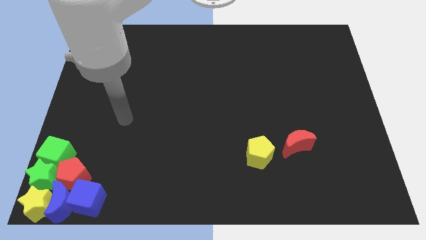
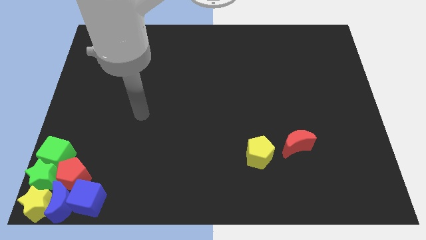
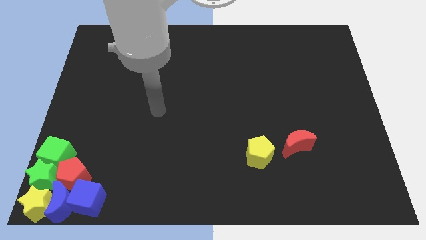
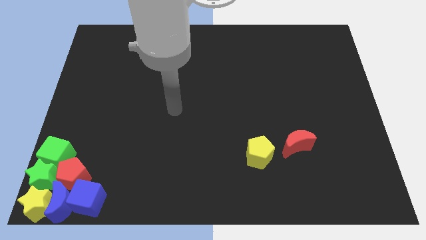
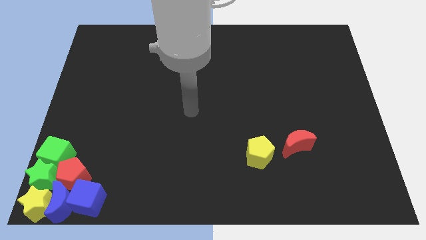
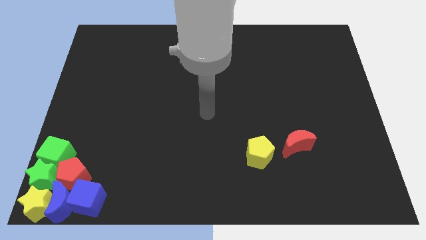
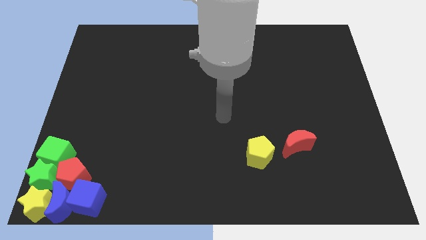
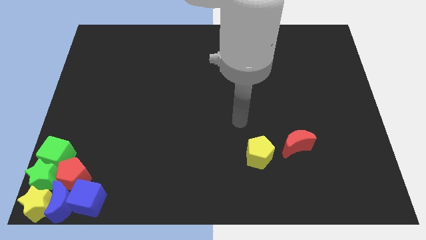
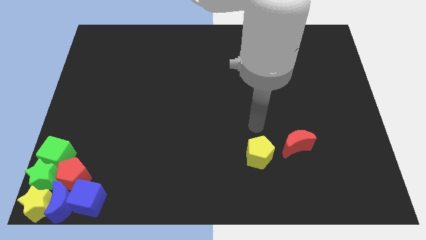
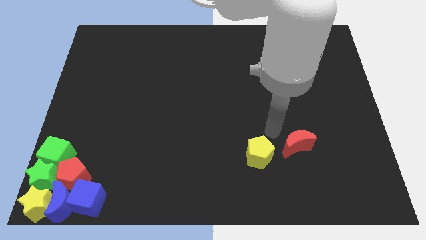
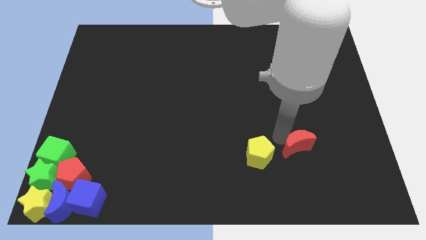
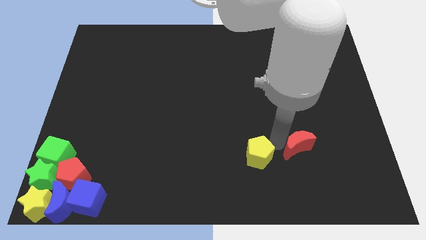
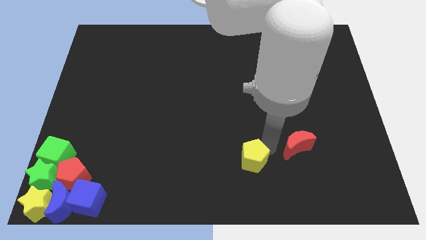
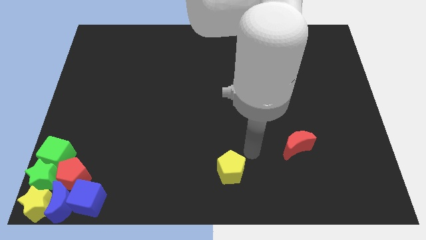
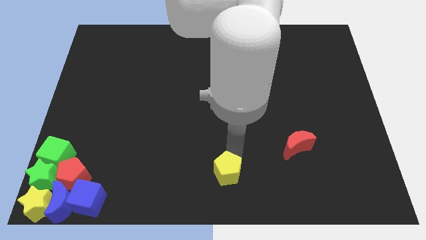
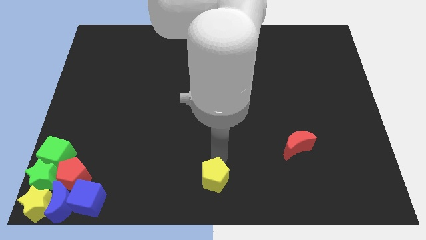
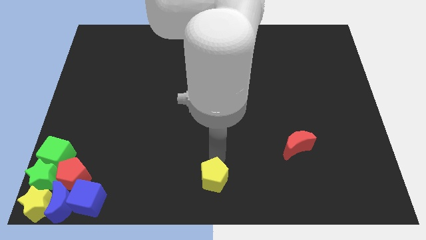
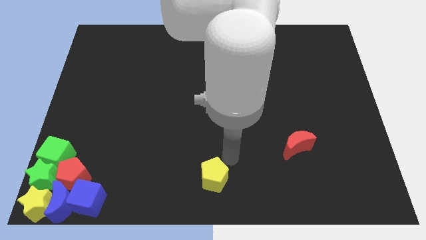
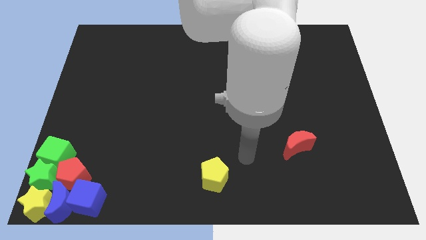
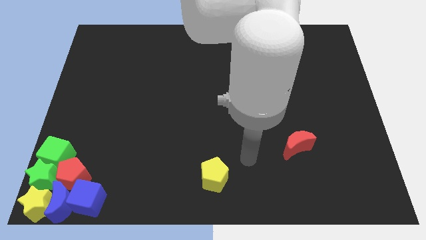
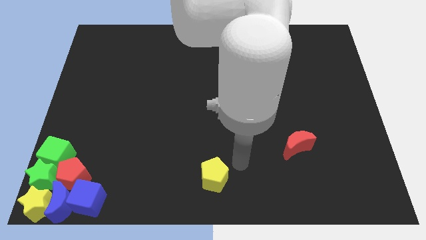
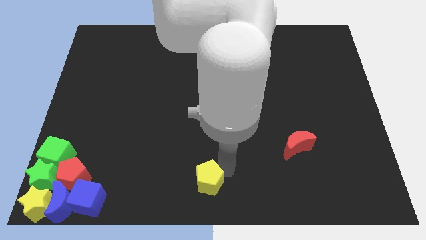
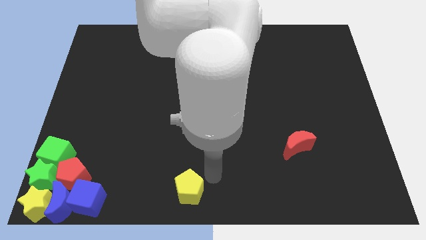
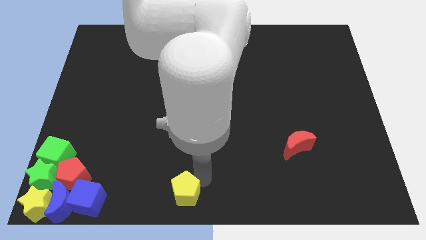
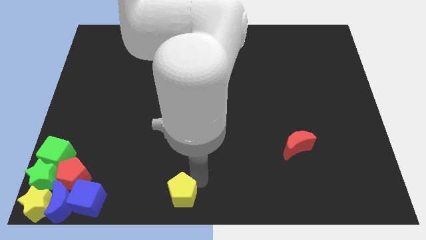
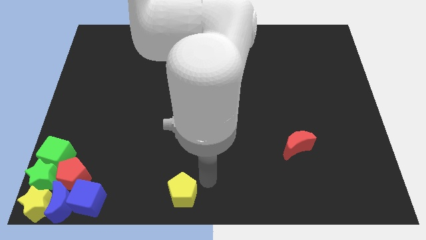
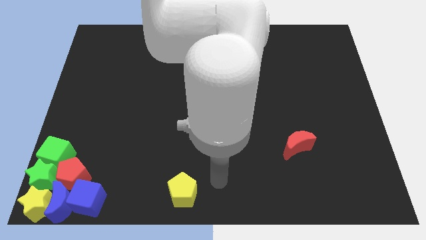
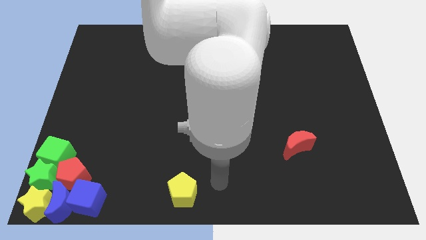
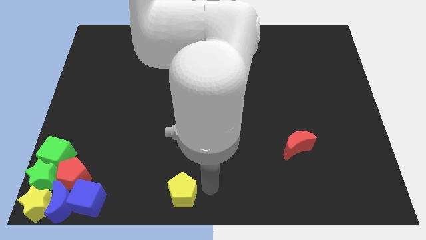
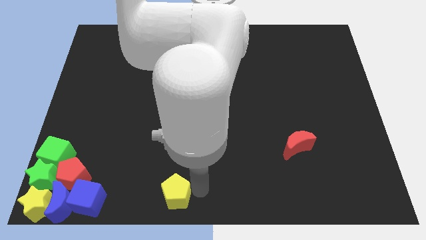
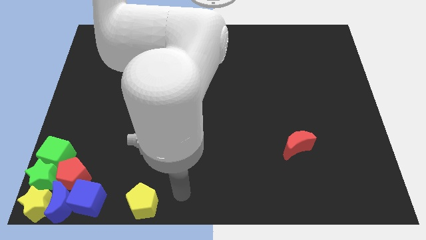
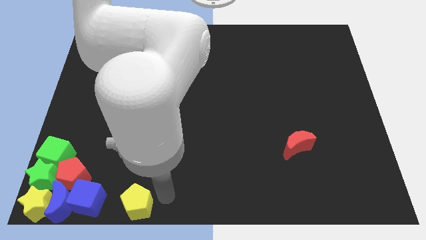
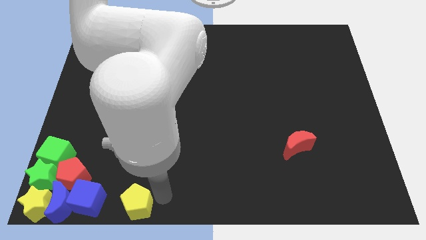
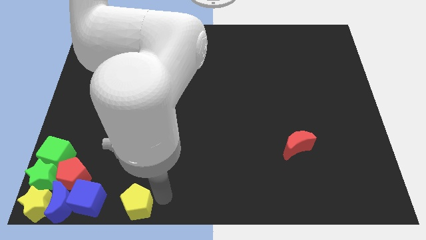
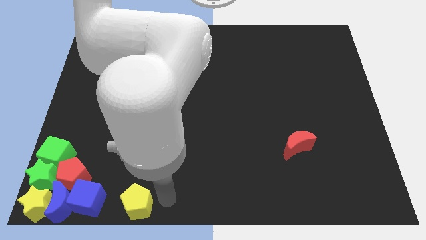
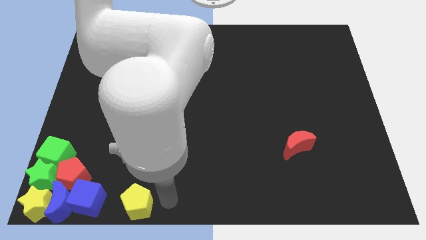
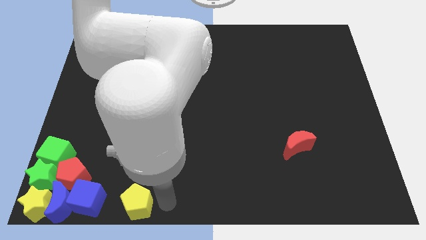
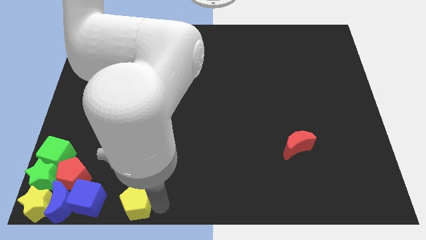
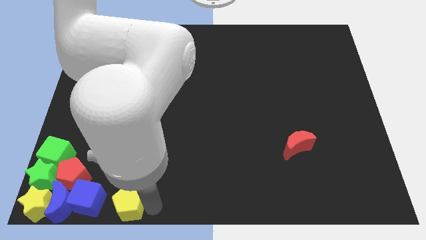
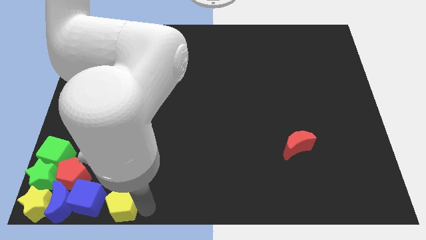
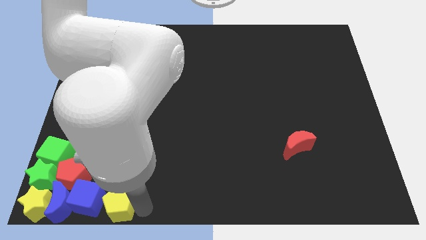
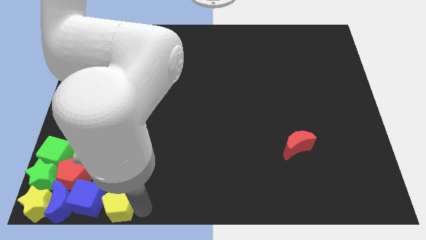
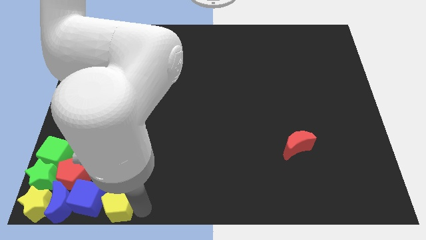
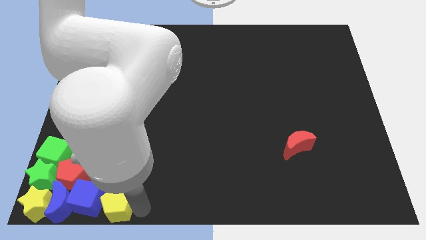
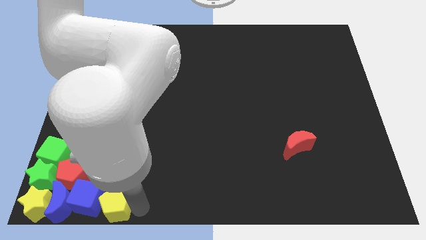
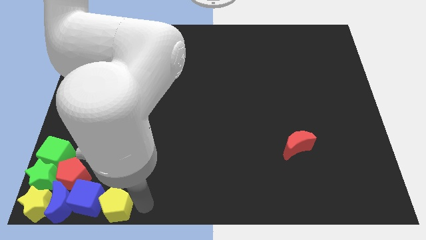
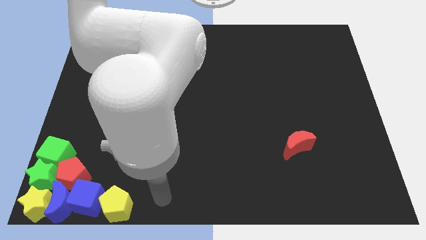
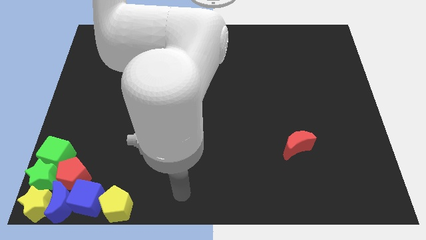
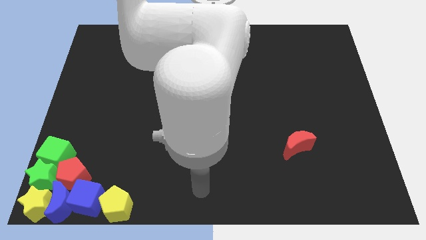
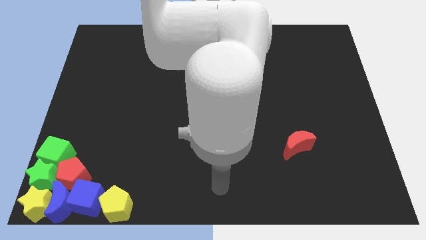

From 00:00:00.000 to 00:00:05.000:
move the yellow pentagon to the right side of the blue cube

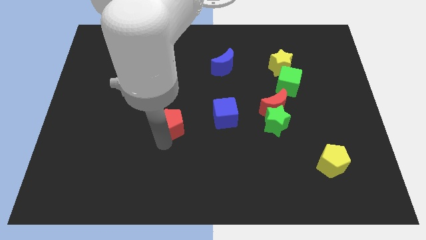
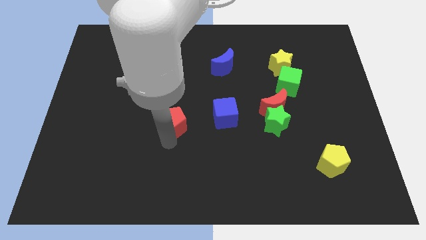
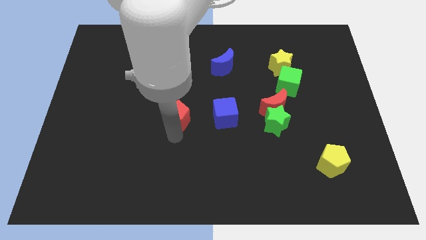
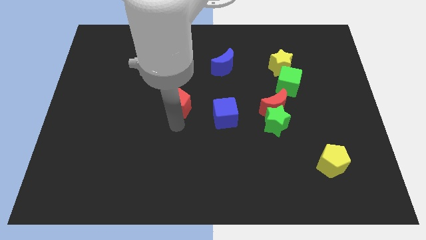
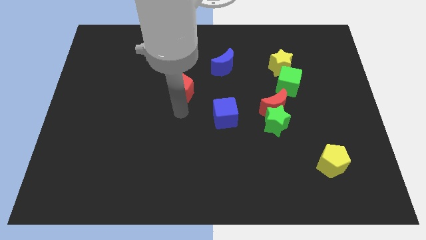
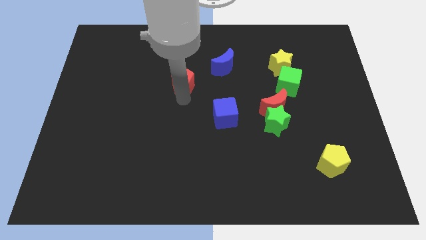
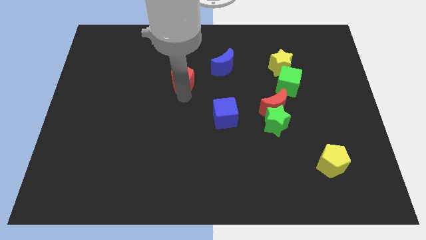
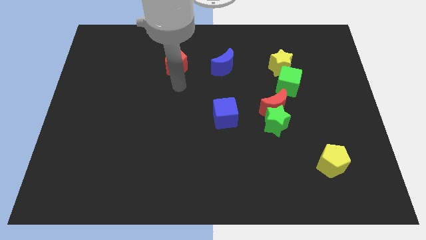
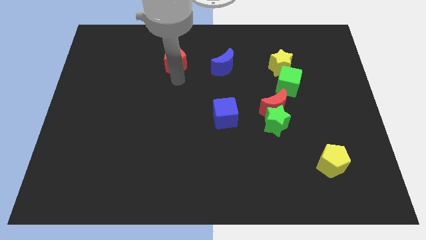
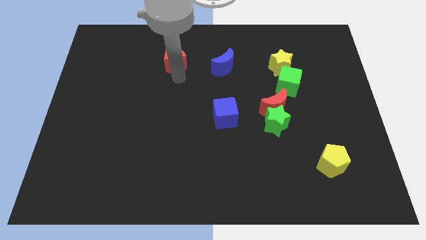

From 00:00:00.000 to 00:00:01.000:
move the red pentagon towards the bottom center of board

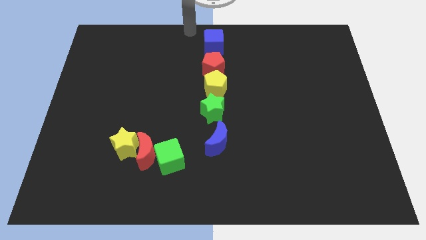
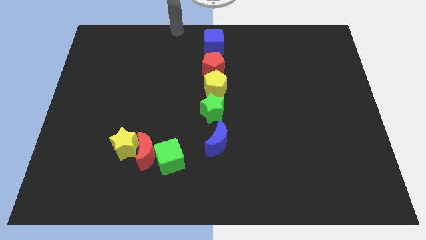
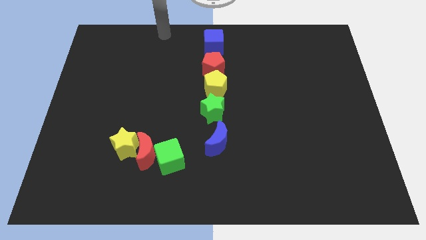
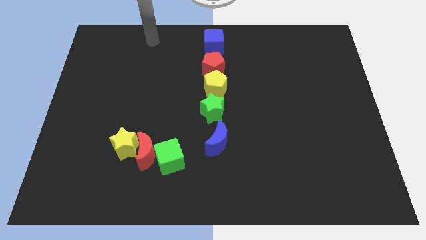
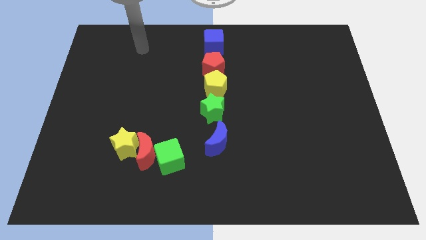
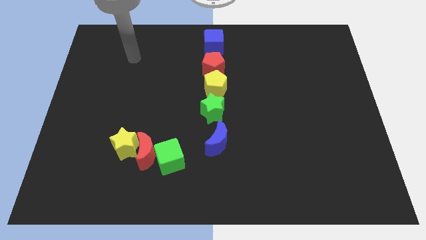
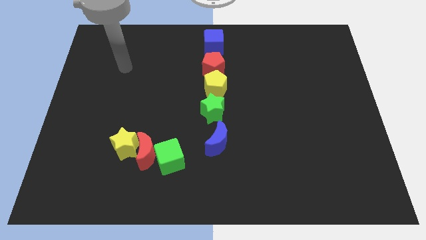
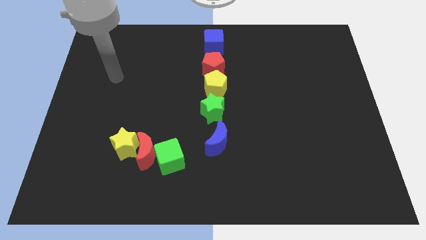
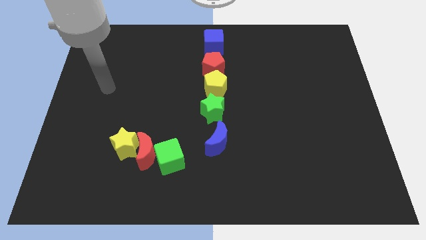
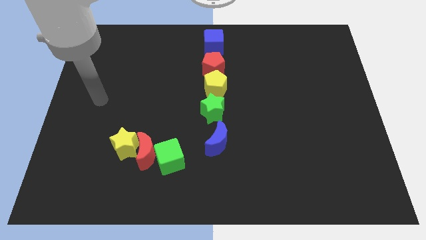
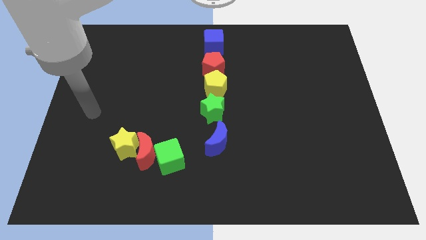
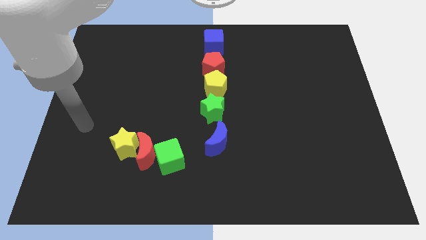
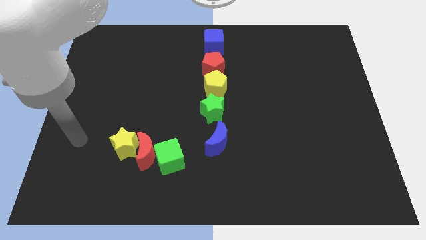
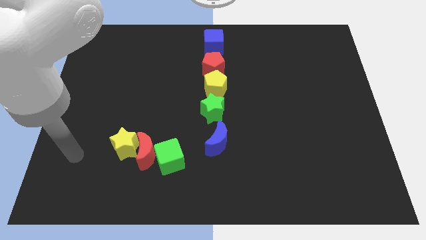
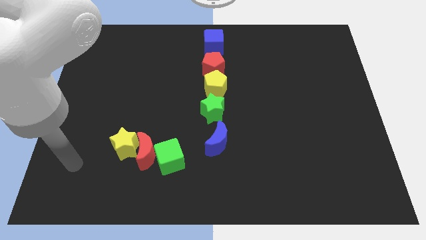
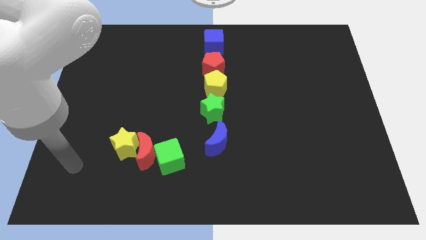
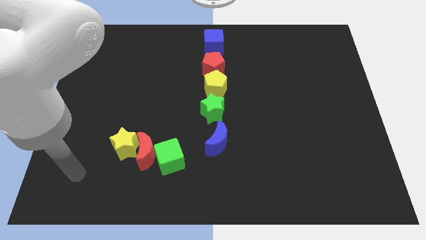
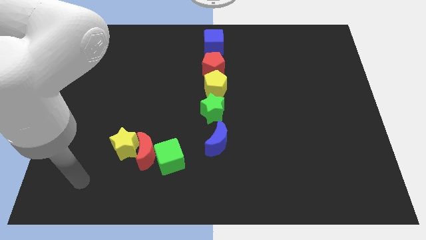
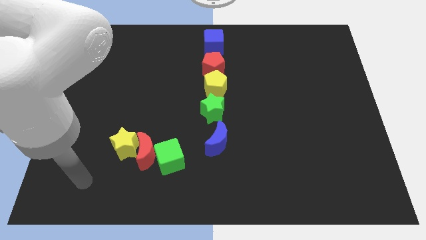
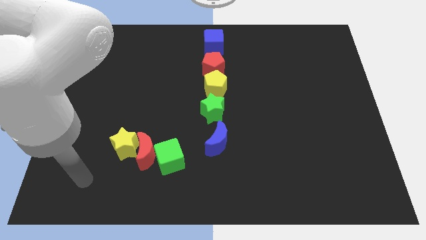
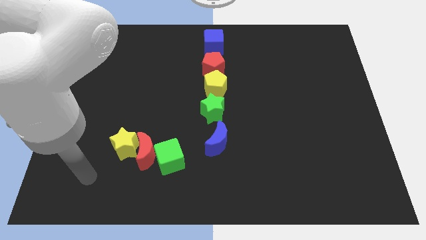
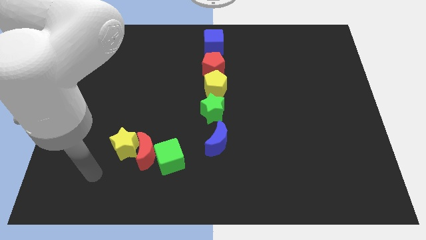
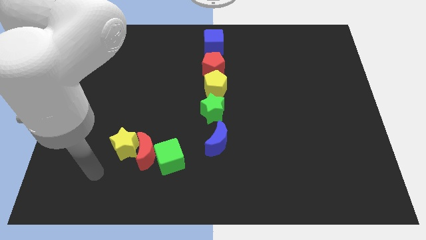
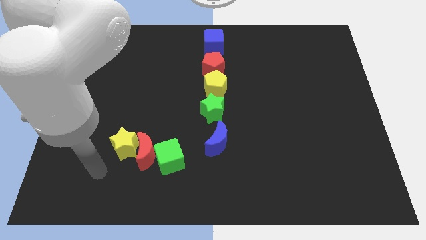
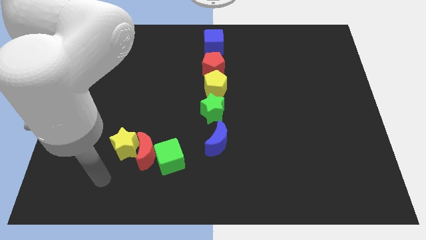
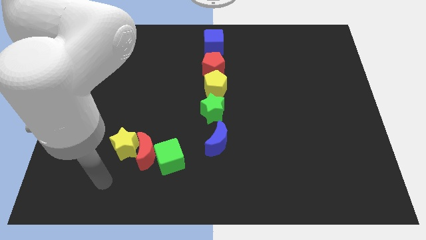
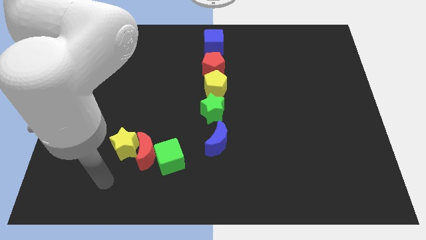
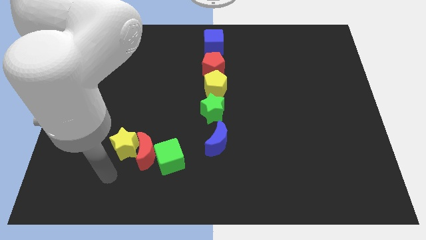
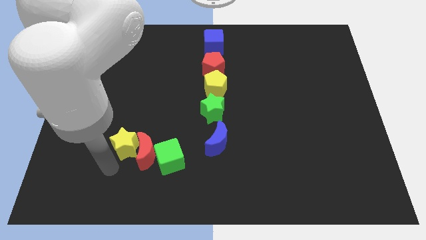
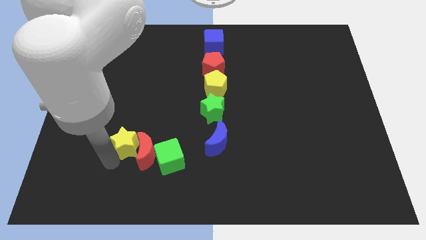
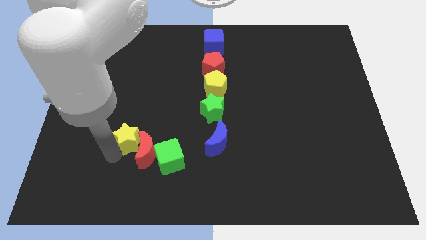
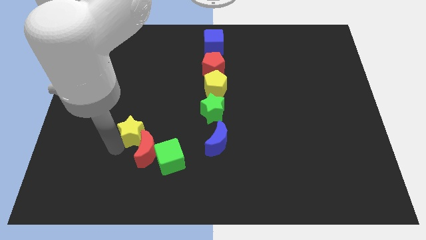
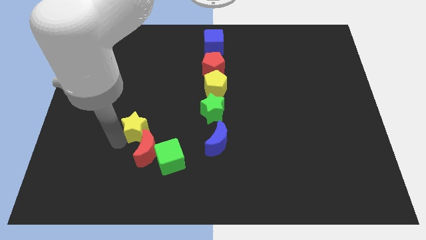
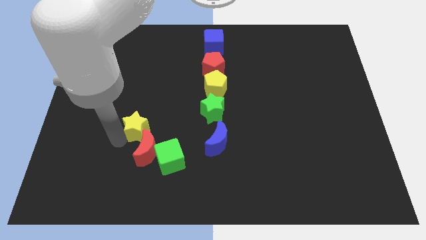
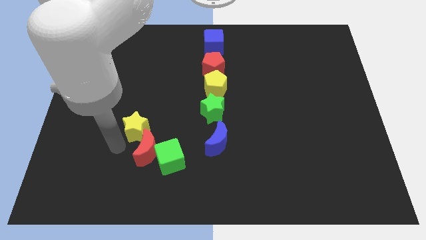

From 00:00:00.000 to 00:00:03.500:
slightly move yellow star towards upward
